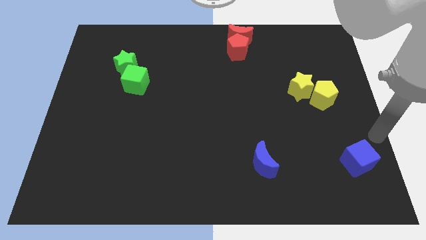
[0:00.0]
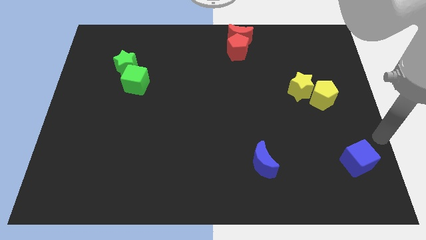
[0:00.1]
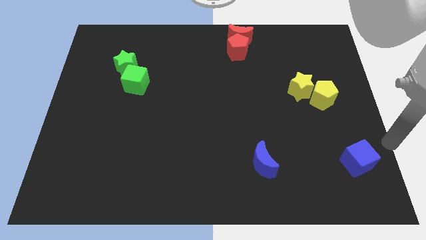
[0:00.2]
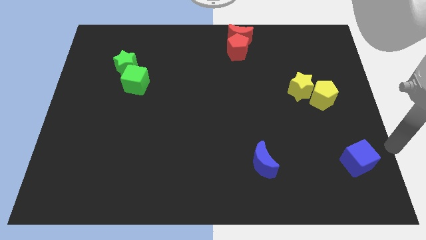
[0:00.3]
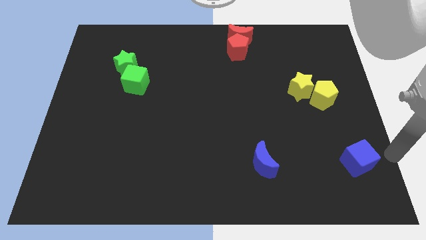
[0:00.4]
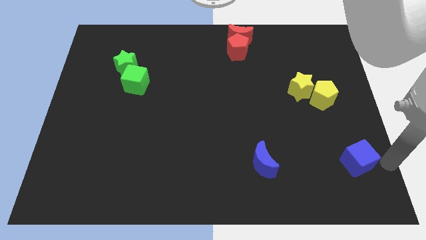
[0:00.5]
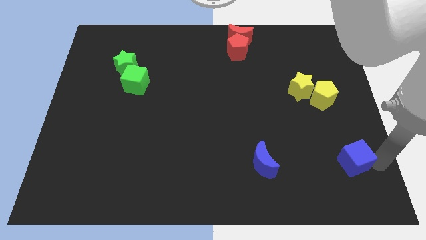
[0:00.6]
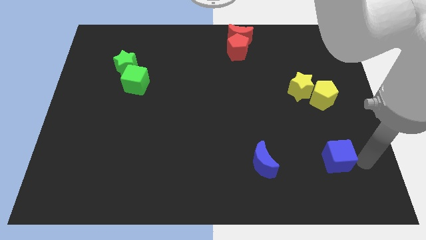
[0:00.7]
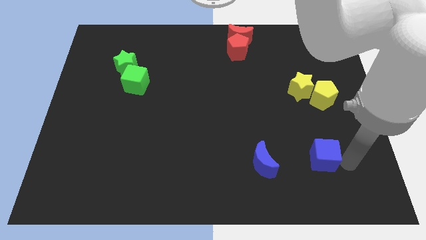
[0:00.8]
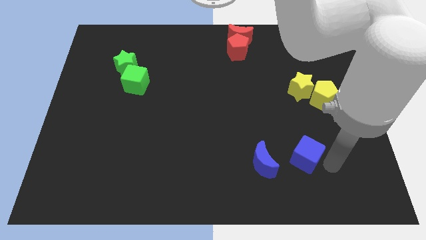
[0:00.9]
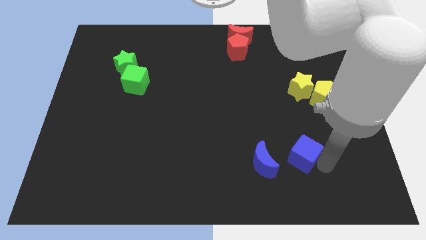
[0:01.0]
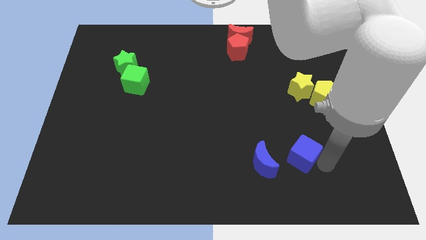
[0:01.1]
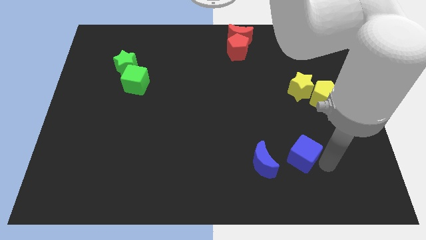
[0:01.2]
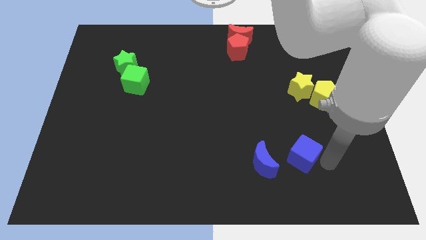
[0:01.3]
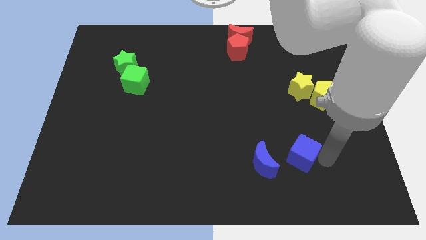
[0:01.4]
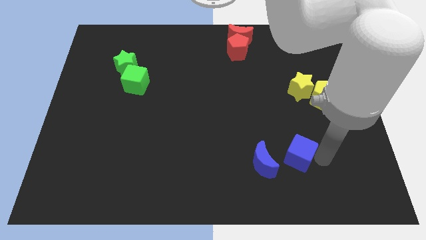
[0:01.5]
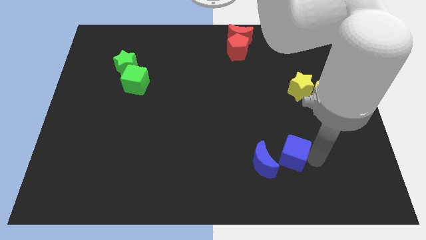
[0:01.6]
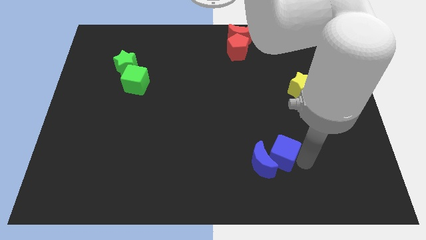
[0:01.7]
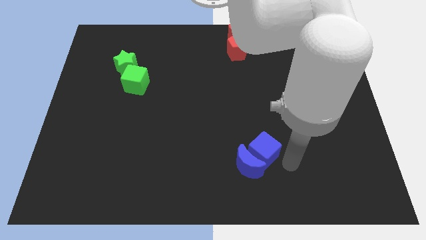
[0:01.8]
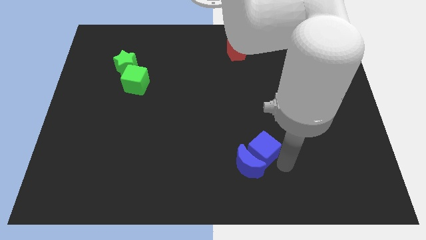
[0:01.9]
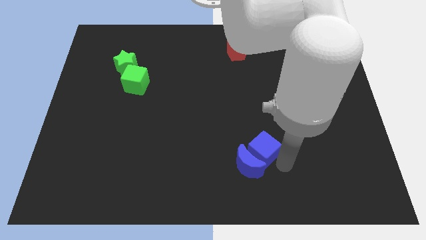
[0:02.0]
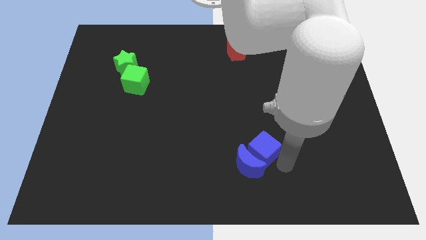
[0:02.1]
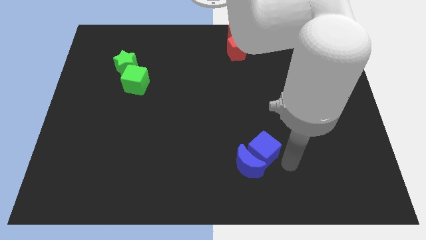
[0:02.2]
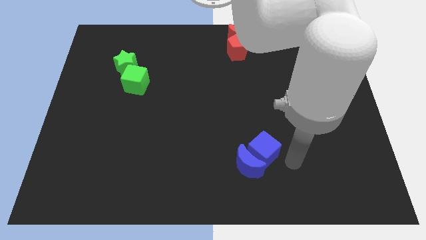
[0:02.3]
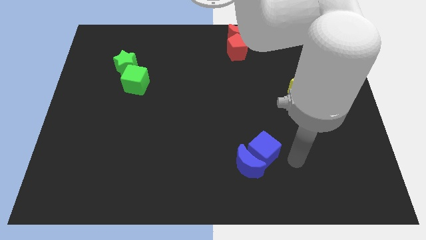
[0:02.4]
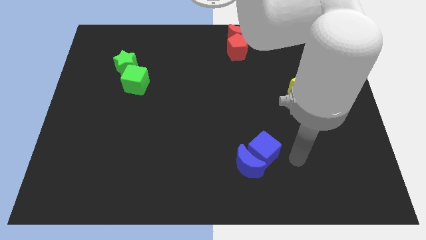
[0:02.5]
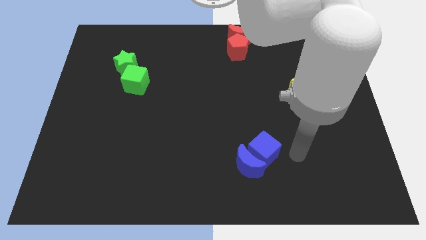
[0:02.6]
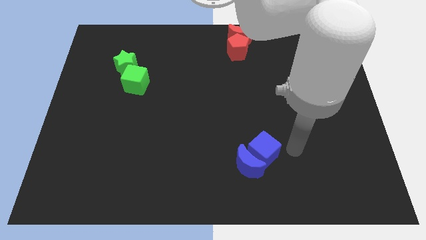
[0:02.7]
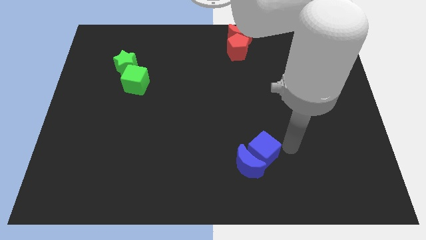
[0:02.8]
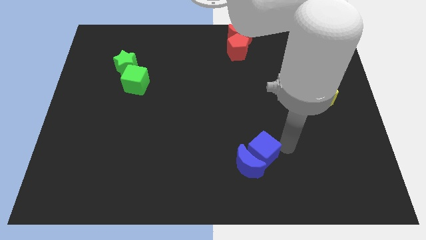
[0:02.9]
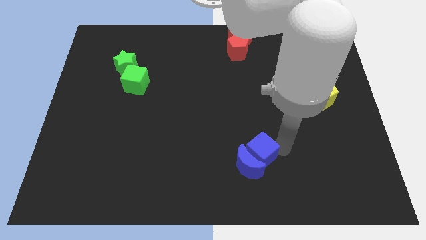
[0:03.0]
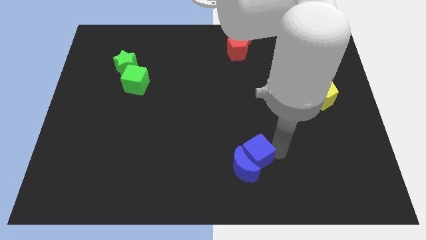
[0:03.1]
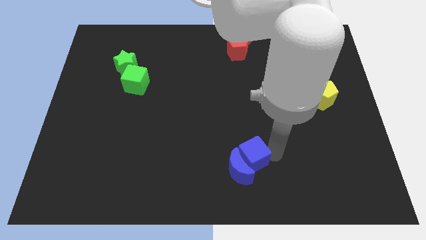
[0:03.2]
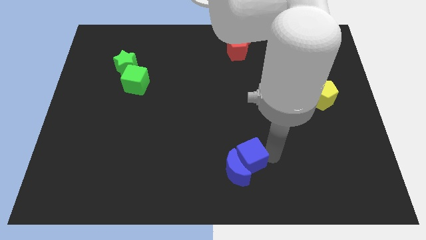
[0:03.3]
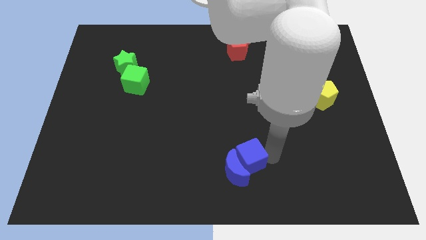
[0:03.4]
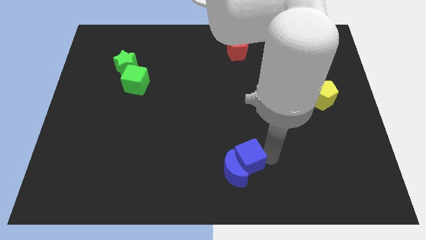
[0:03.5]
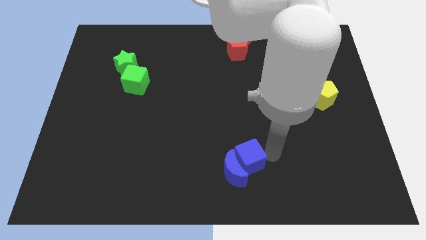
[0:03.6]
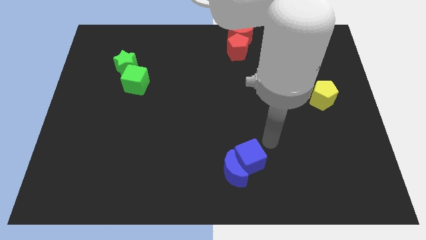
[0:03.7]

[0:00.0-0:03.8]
move the blue cube to the right of the blue crescent

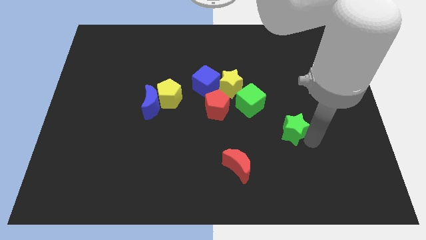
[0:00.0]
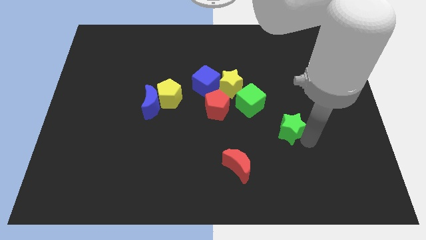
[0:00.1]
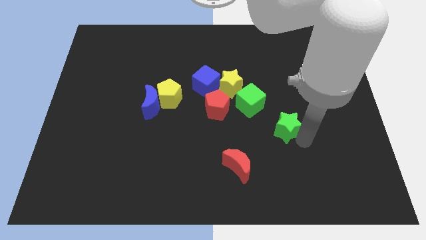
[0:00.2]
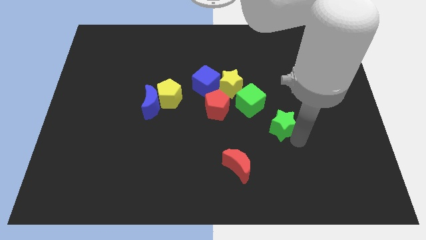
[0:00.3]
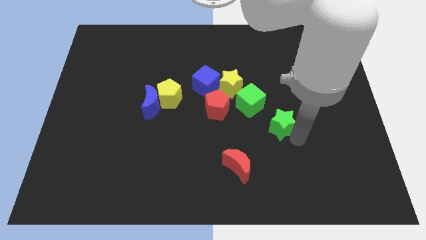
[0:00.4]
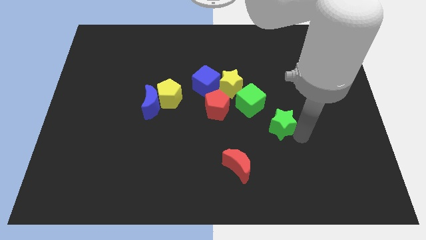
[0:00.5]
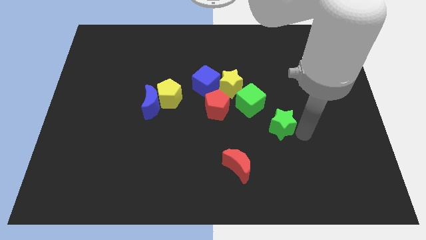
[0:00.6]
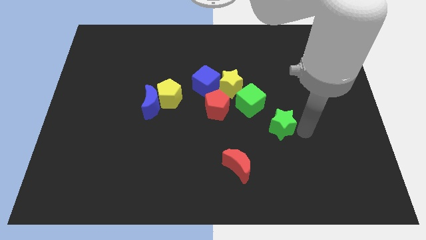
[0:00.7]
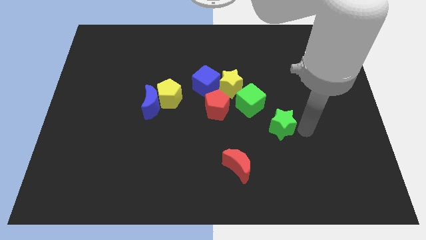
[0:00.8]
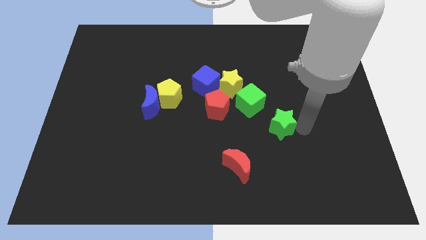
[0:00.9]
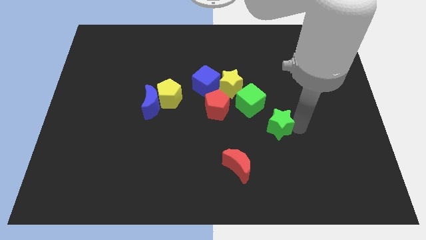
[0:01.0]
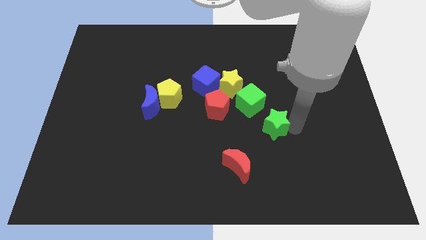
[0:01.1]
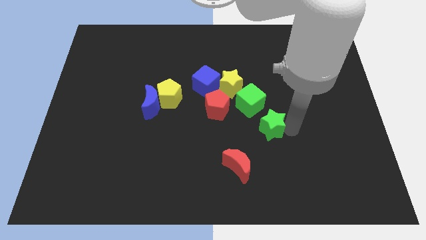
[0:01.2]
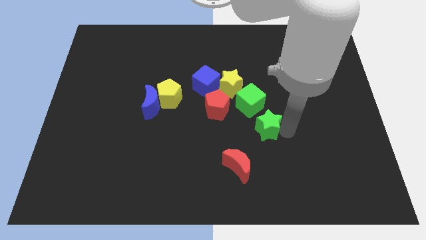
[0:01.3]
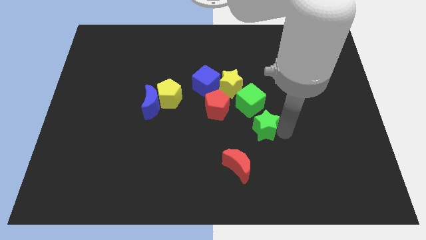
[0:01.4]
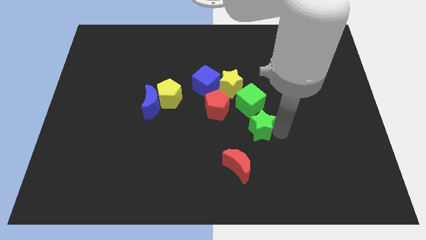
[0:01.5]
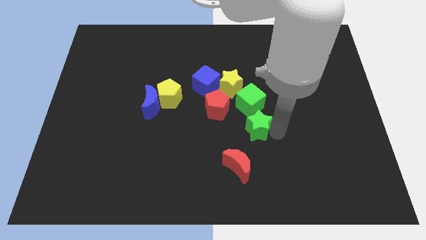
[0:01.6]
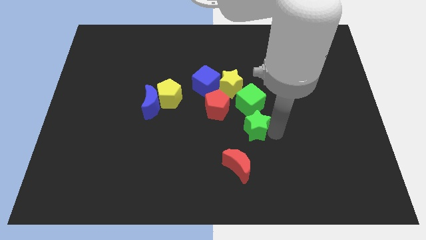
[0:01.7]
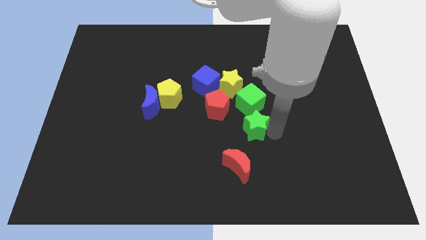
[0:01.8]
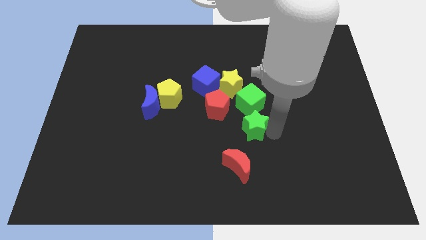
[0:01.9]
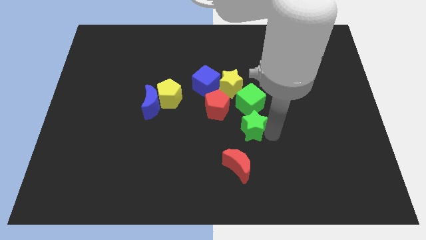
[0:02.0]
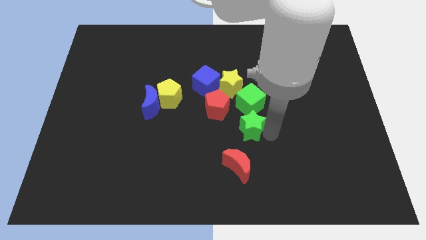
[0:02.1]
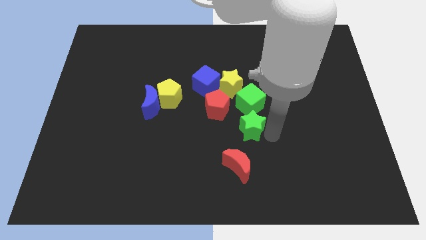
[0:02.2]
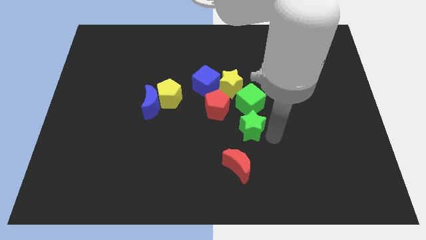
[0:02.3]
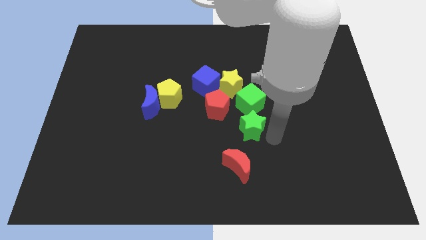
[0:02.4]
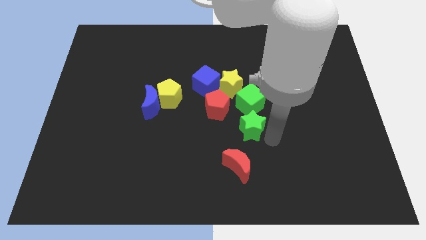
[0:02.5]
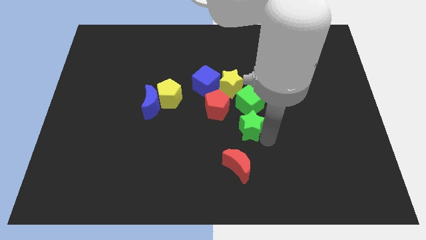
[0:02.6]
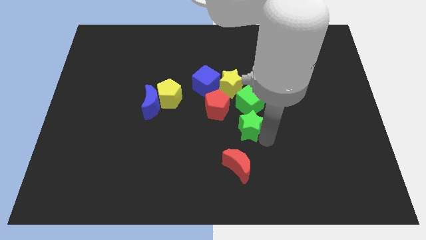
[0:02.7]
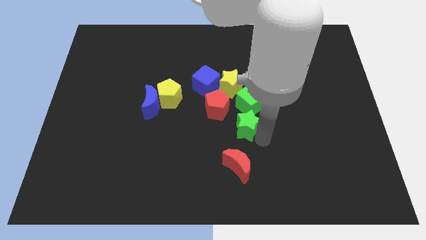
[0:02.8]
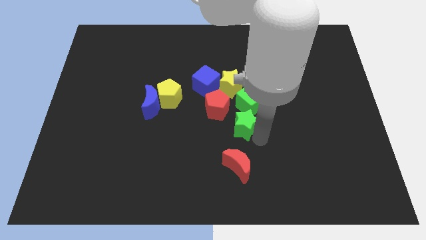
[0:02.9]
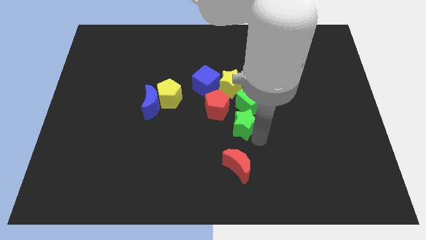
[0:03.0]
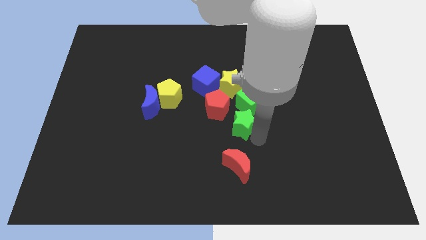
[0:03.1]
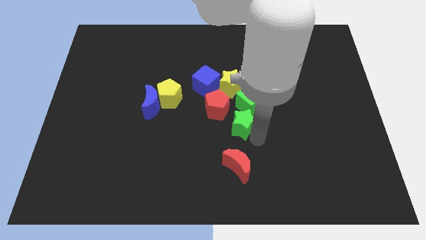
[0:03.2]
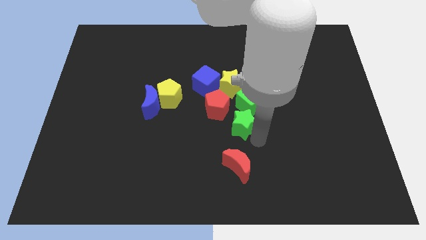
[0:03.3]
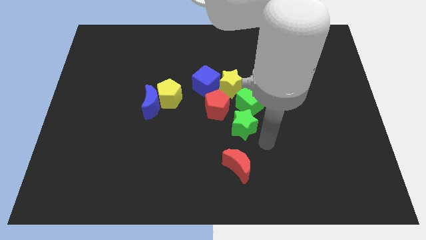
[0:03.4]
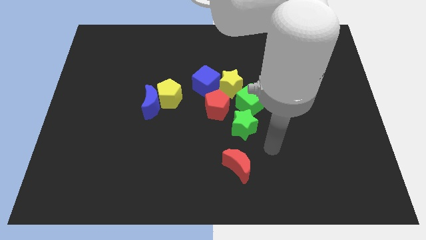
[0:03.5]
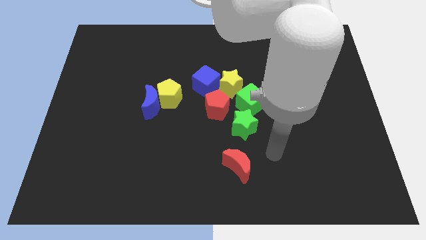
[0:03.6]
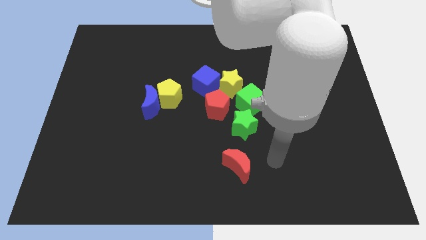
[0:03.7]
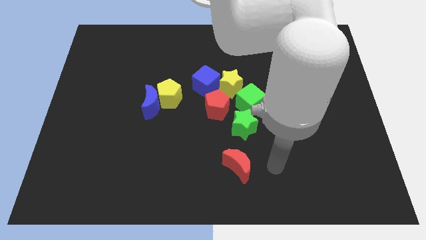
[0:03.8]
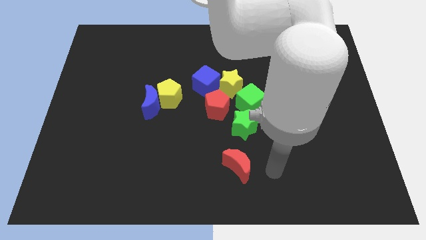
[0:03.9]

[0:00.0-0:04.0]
move green star to bottom of the green block

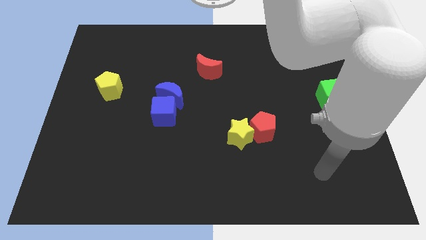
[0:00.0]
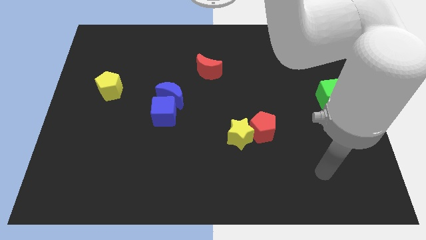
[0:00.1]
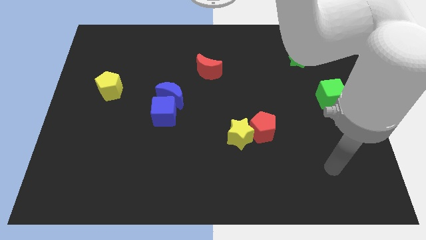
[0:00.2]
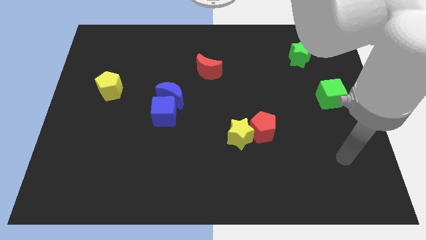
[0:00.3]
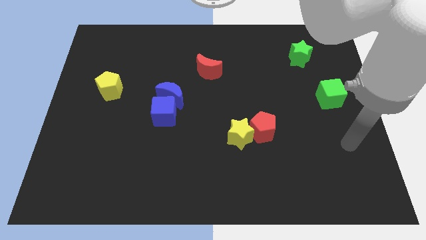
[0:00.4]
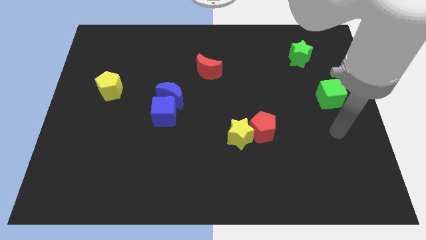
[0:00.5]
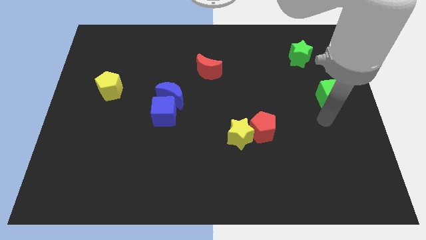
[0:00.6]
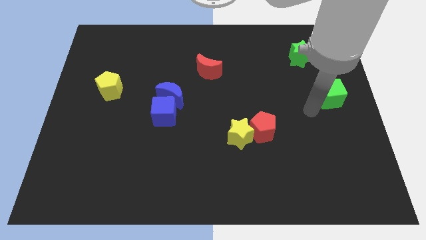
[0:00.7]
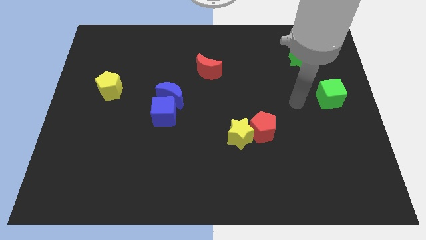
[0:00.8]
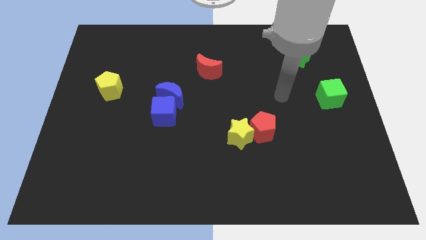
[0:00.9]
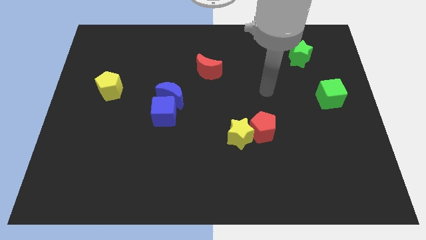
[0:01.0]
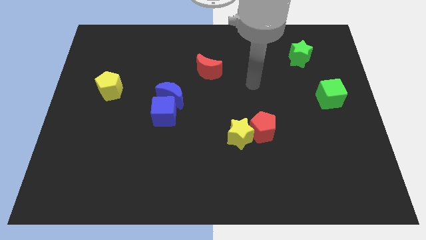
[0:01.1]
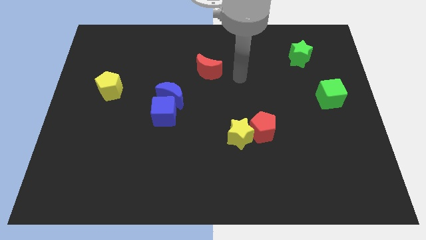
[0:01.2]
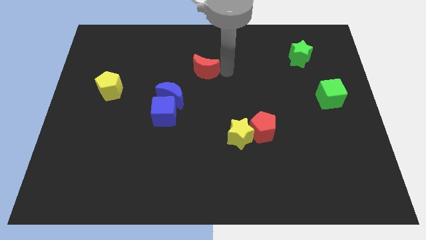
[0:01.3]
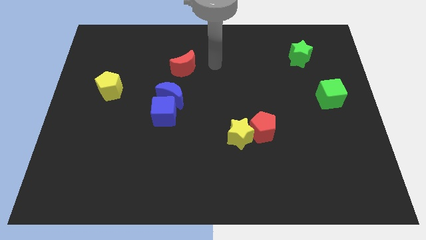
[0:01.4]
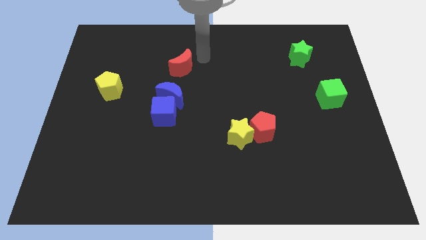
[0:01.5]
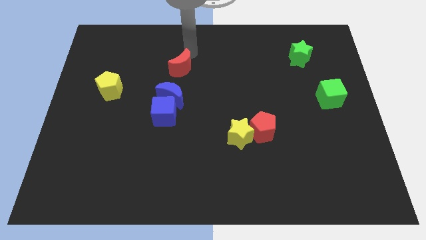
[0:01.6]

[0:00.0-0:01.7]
slide the red moon
